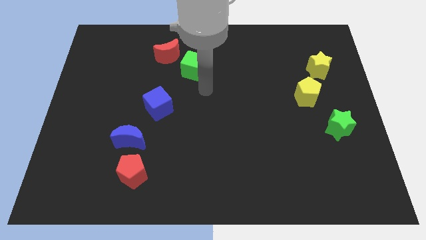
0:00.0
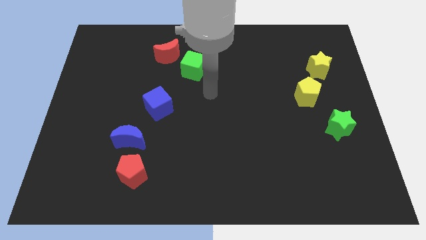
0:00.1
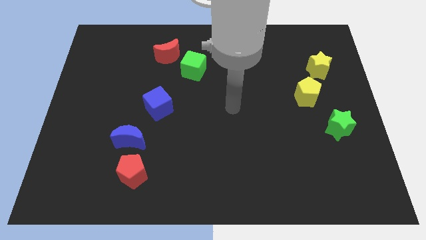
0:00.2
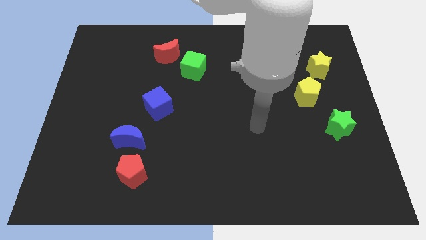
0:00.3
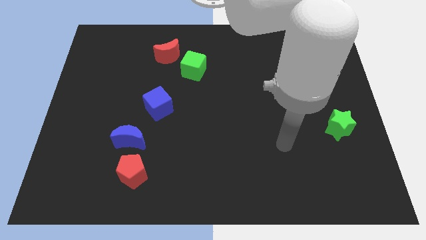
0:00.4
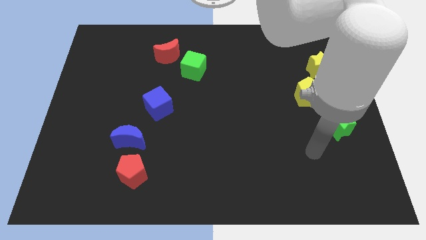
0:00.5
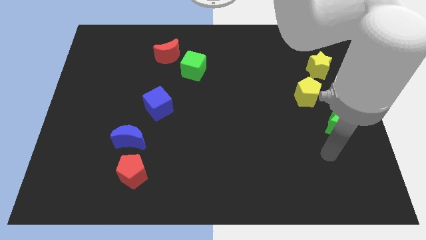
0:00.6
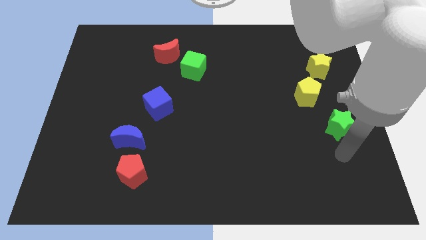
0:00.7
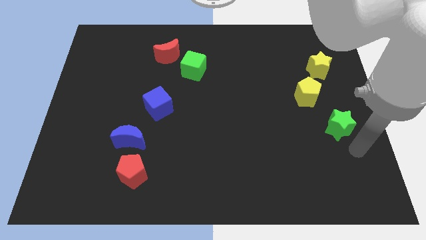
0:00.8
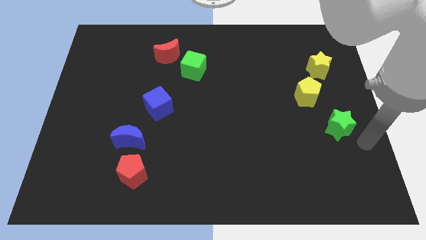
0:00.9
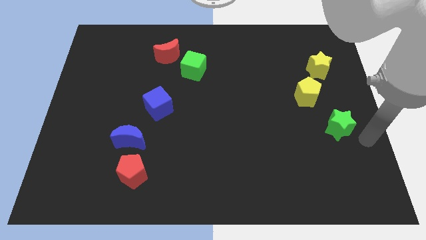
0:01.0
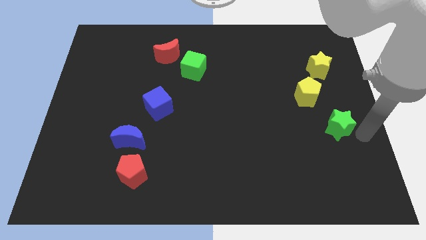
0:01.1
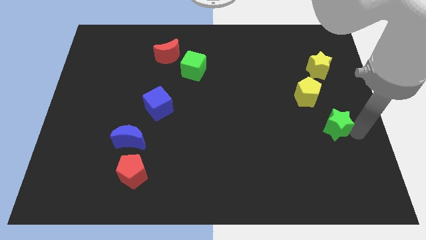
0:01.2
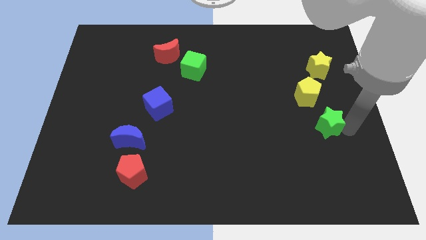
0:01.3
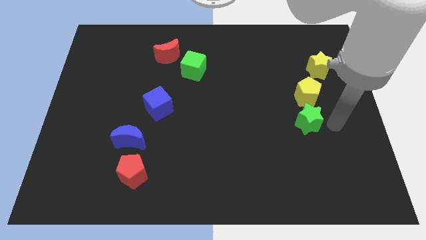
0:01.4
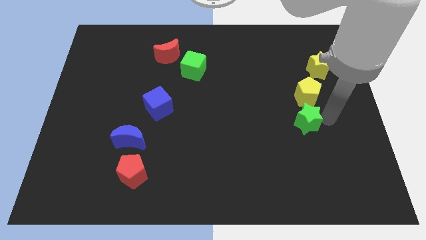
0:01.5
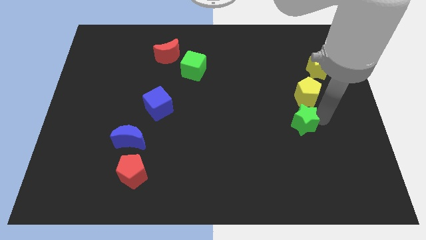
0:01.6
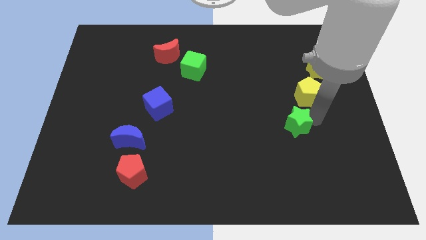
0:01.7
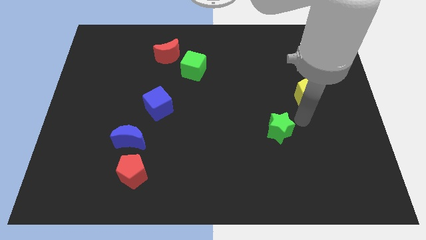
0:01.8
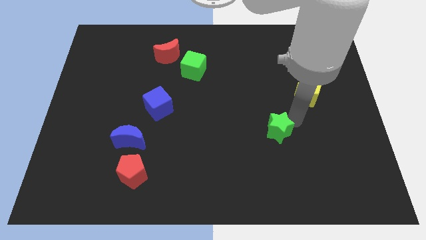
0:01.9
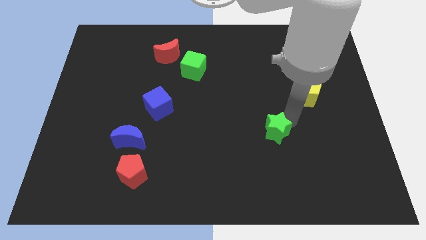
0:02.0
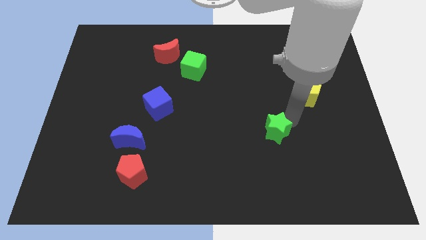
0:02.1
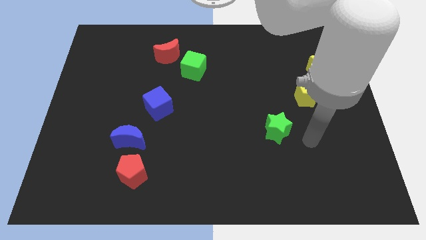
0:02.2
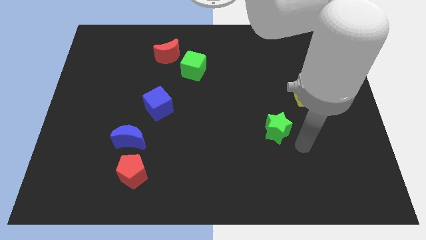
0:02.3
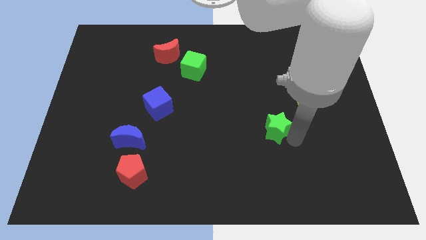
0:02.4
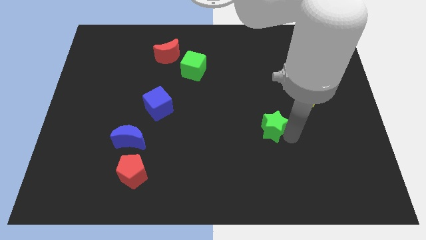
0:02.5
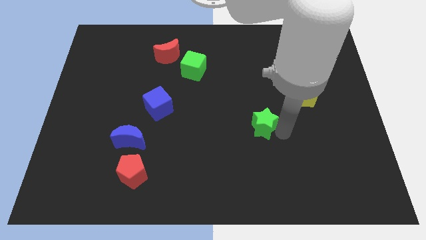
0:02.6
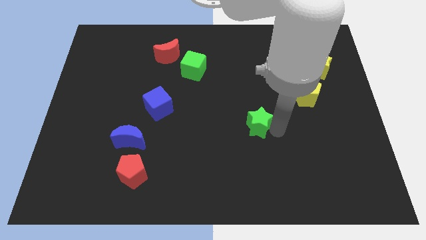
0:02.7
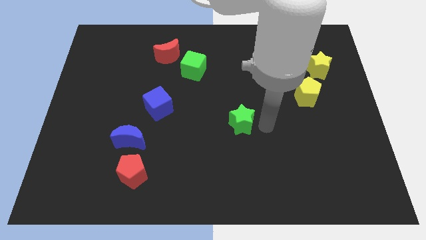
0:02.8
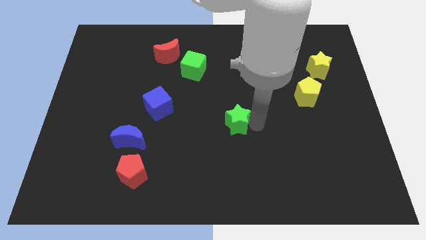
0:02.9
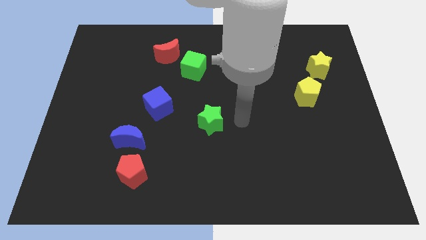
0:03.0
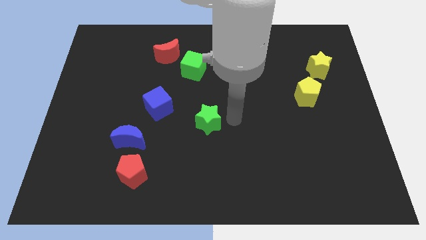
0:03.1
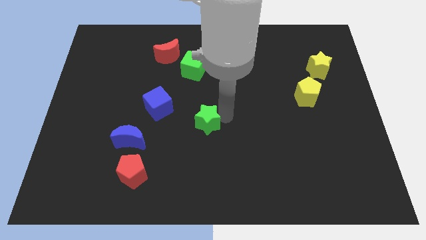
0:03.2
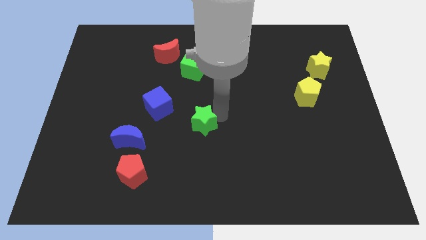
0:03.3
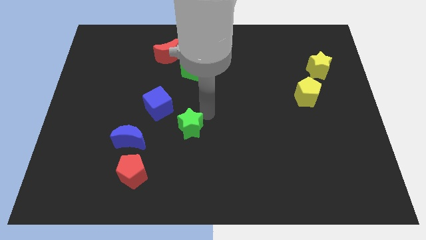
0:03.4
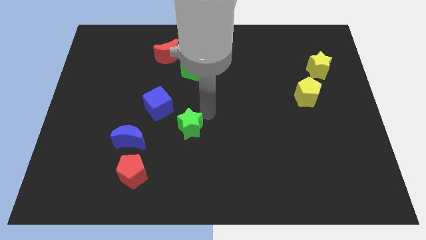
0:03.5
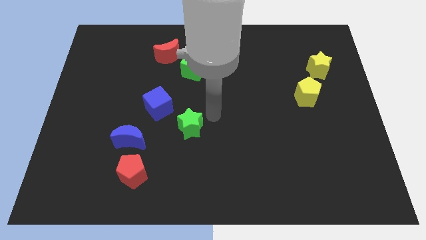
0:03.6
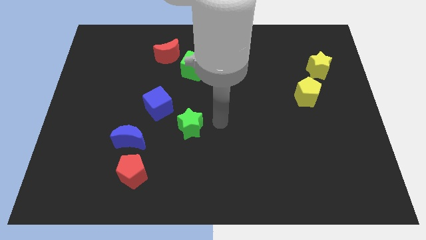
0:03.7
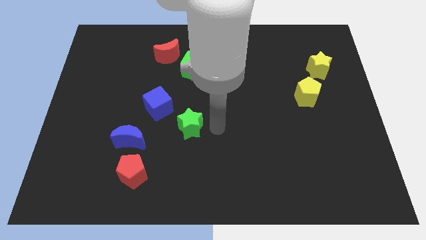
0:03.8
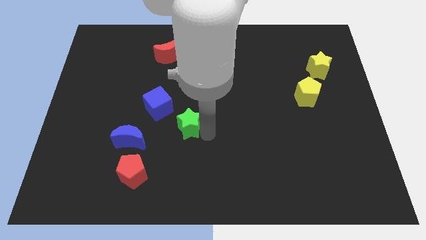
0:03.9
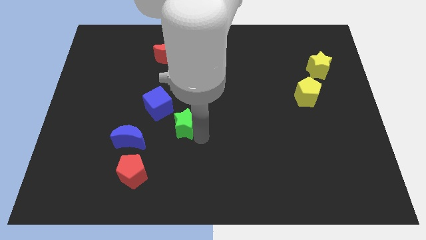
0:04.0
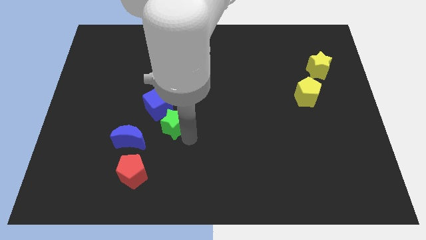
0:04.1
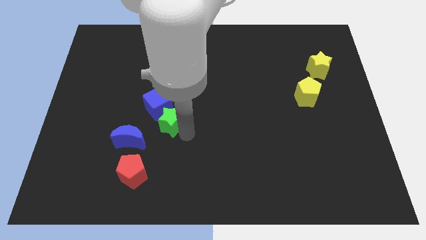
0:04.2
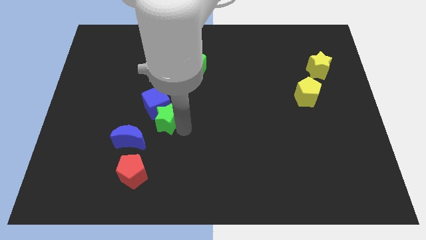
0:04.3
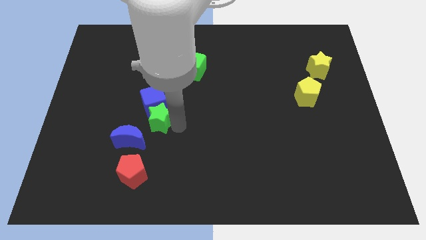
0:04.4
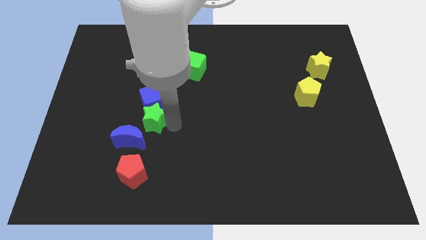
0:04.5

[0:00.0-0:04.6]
push the green star next to the blue cube

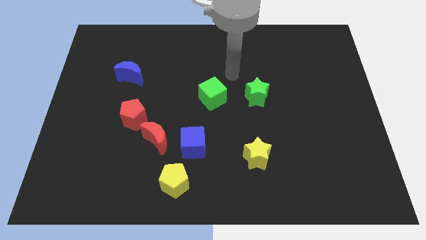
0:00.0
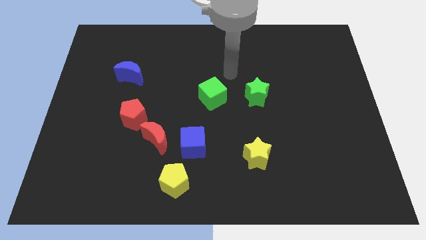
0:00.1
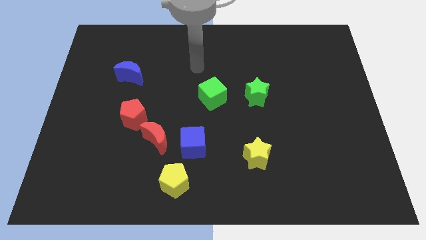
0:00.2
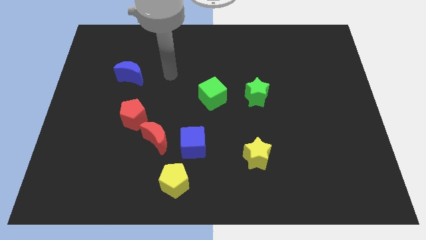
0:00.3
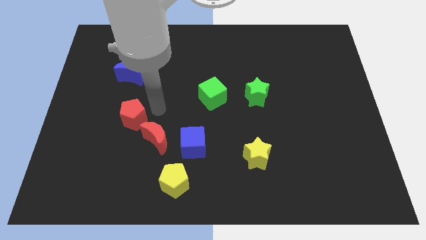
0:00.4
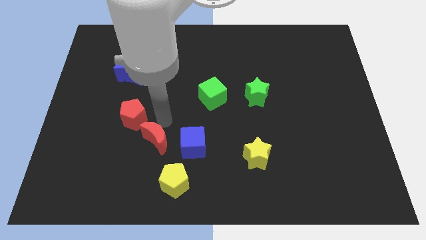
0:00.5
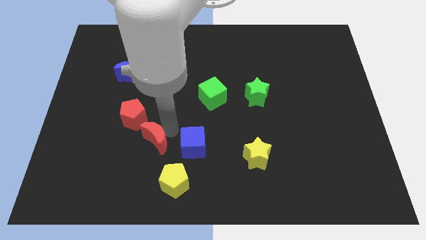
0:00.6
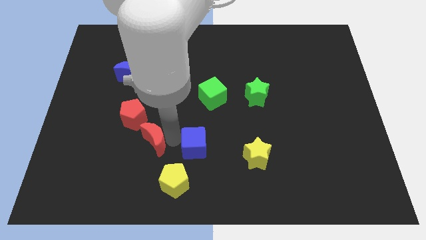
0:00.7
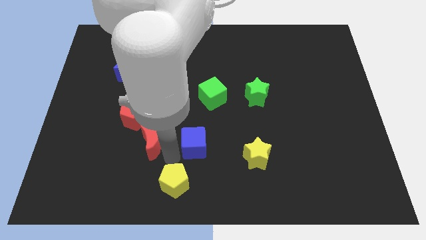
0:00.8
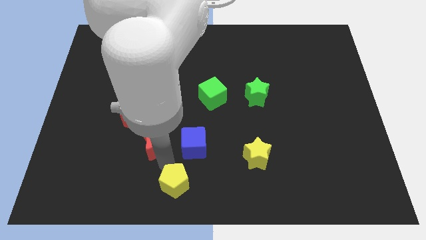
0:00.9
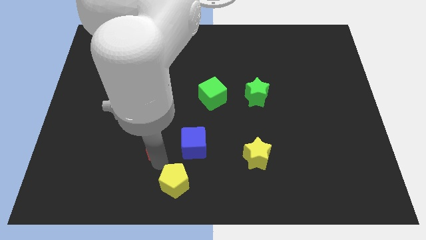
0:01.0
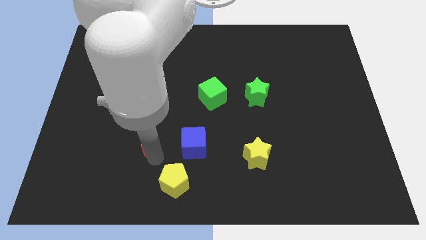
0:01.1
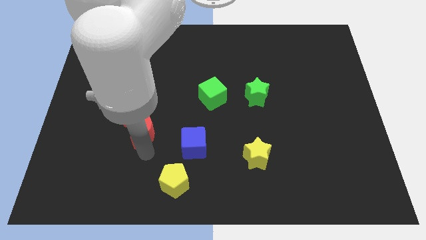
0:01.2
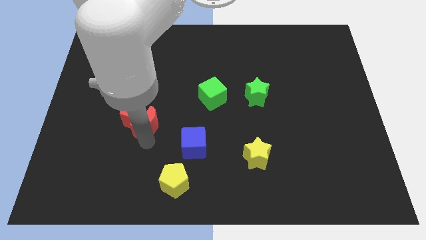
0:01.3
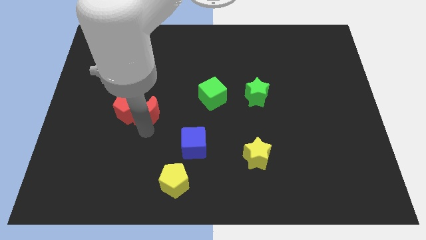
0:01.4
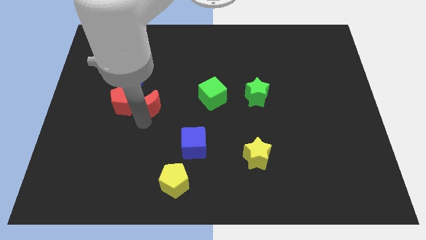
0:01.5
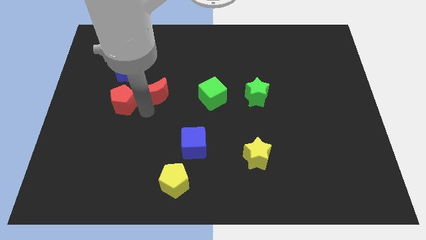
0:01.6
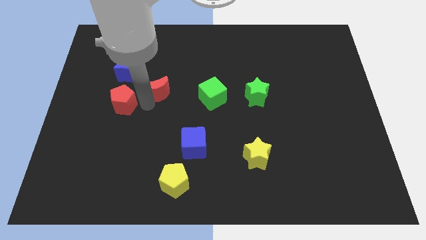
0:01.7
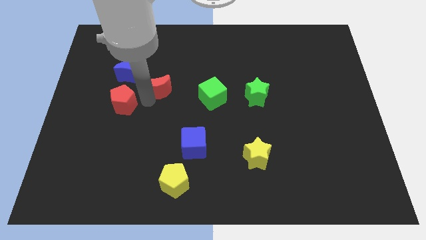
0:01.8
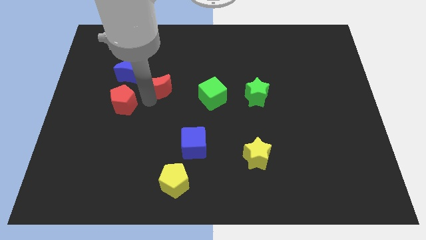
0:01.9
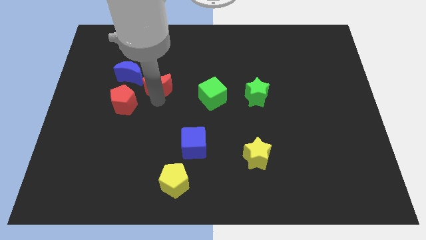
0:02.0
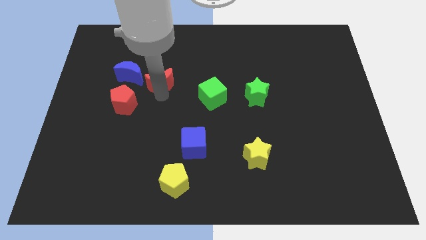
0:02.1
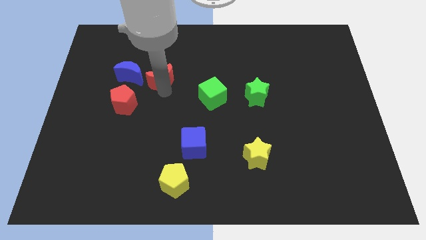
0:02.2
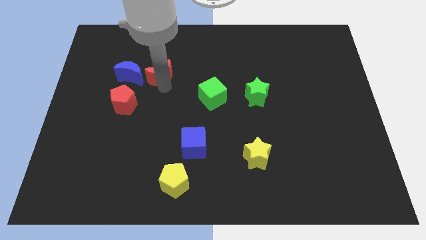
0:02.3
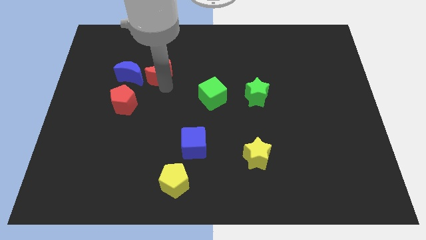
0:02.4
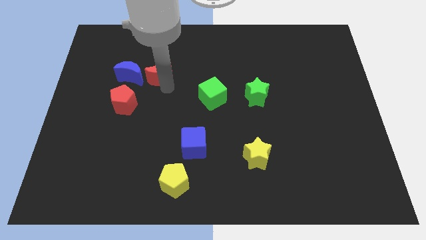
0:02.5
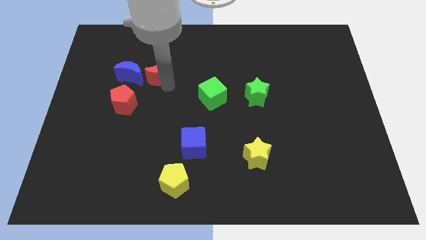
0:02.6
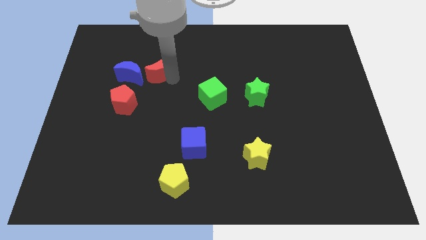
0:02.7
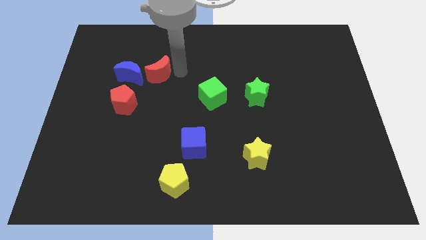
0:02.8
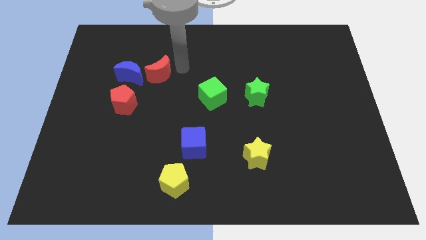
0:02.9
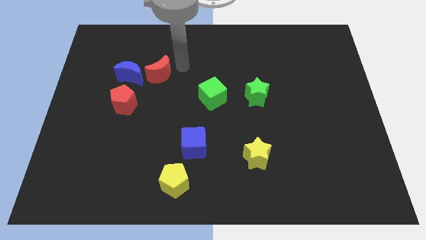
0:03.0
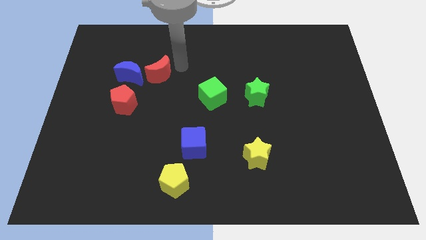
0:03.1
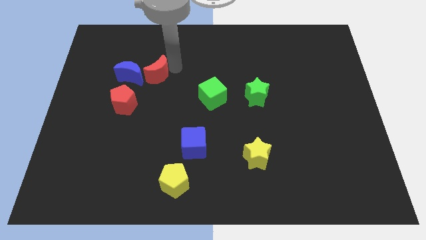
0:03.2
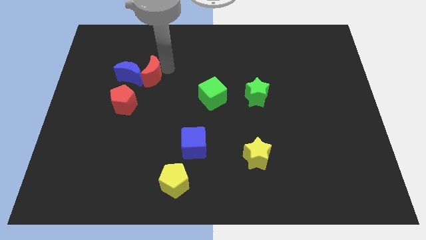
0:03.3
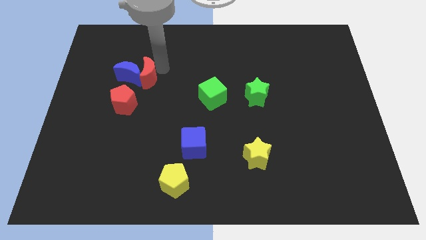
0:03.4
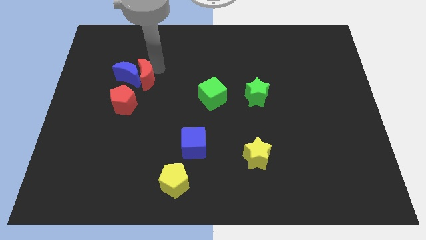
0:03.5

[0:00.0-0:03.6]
slide the red moon close to the blue moon

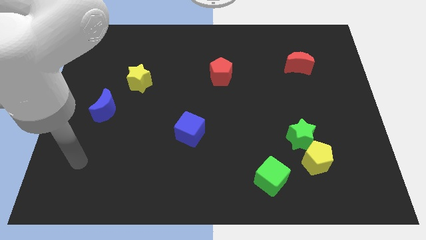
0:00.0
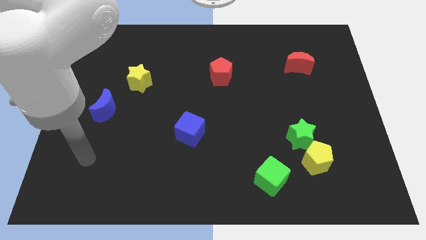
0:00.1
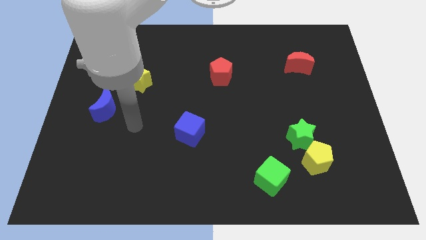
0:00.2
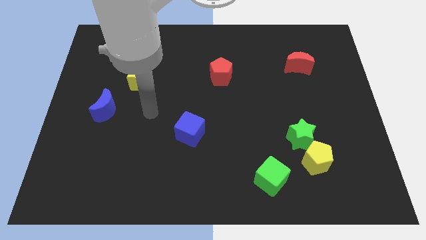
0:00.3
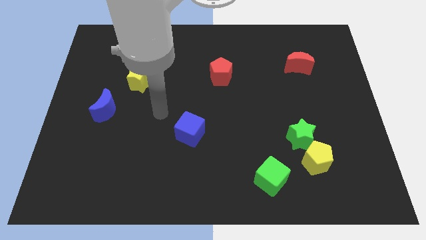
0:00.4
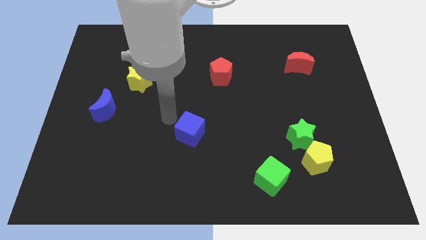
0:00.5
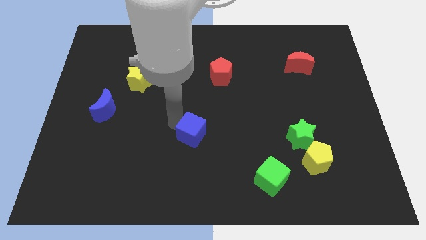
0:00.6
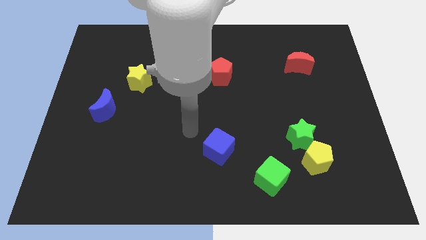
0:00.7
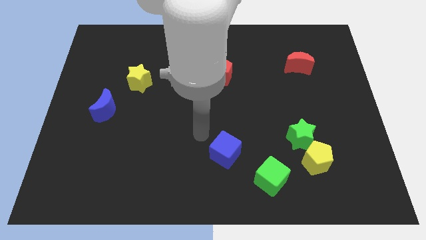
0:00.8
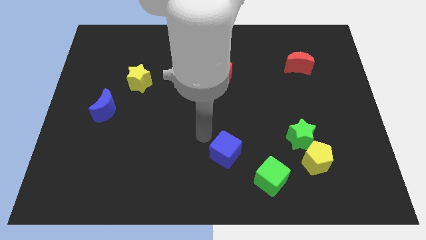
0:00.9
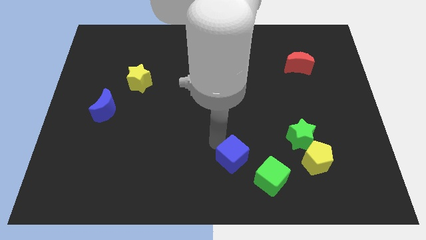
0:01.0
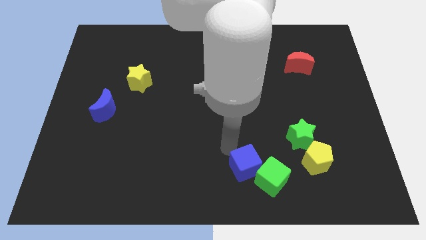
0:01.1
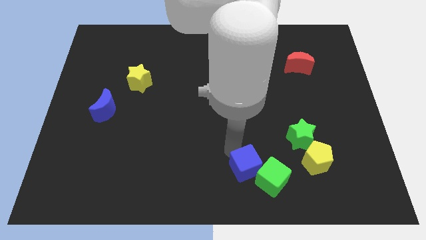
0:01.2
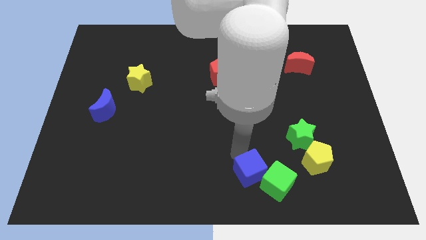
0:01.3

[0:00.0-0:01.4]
put the blue cube towards the green cube
